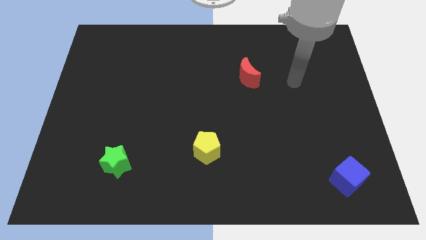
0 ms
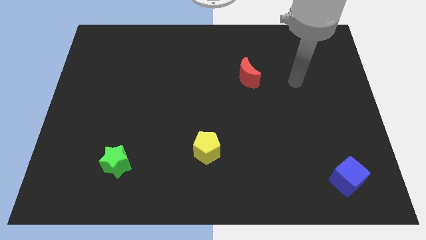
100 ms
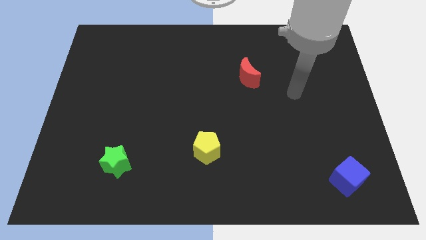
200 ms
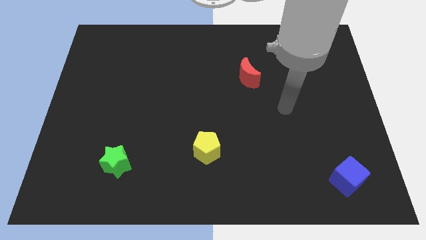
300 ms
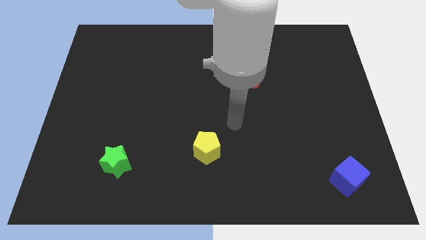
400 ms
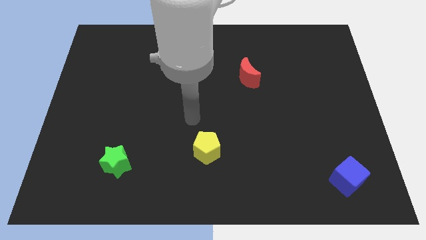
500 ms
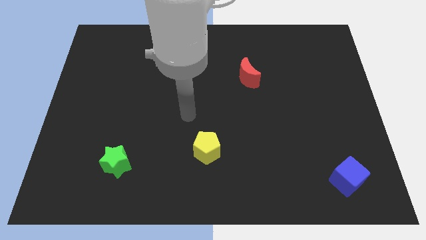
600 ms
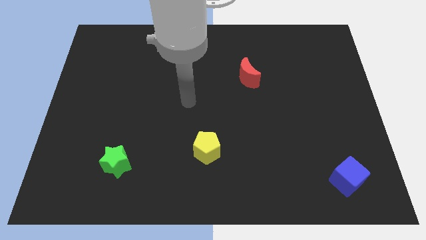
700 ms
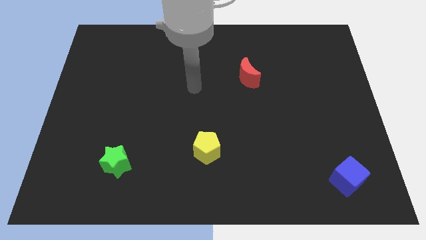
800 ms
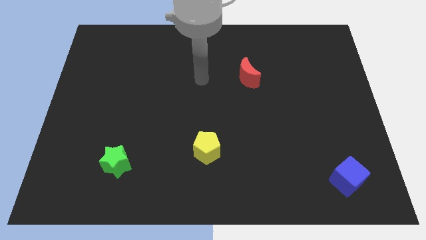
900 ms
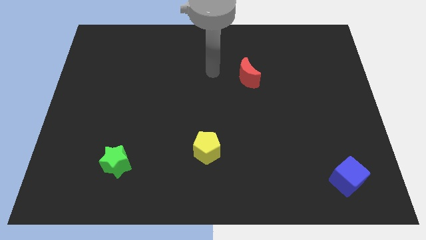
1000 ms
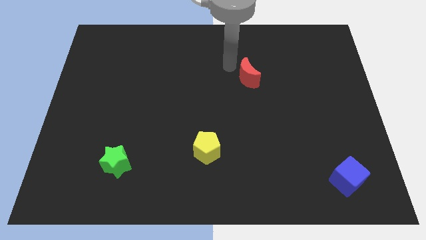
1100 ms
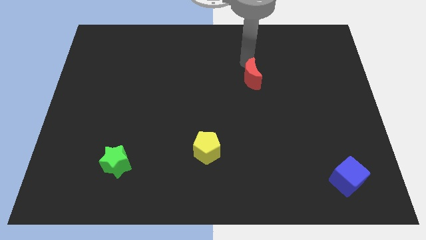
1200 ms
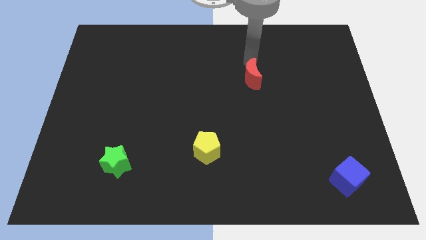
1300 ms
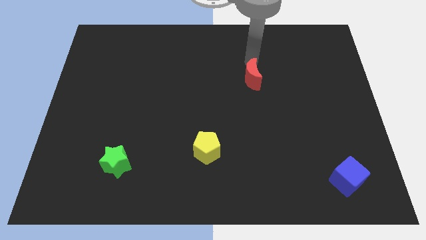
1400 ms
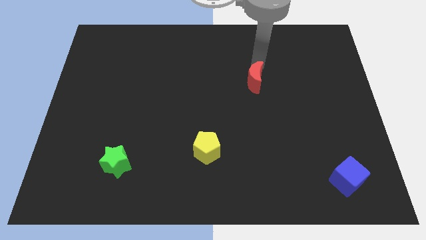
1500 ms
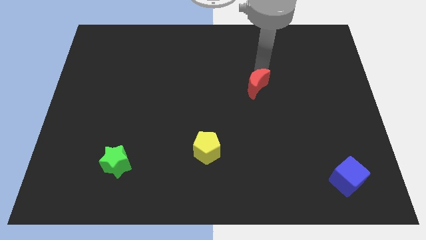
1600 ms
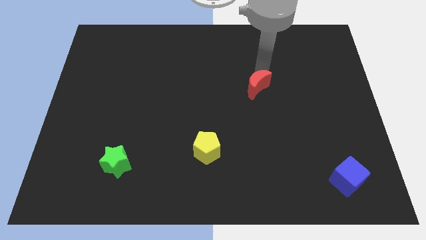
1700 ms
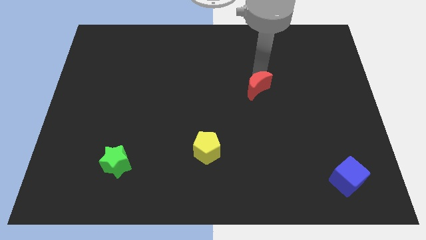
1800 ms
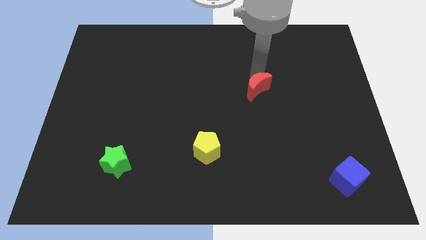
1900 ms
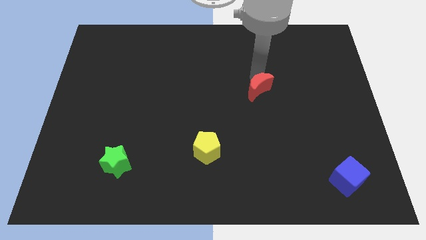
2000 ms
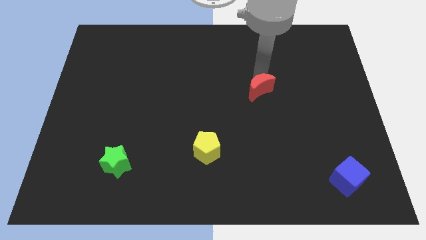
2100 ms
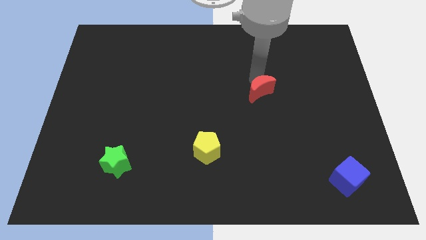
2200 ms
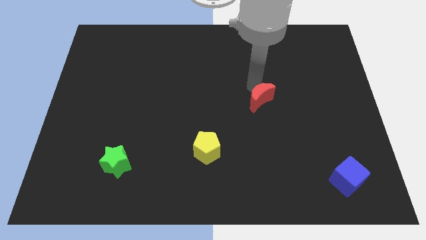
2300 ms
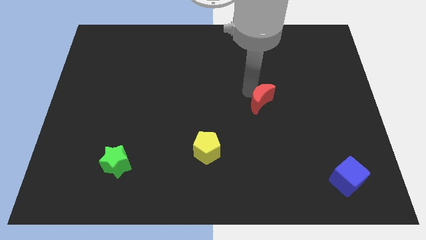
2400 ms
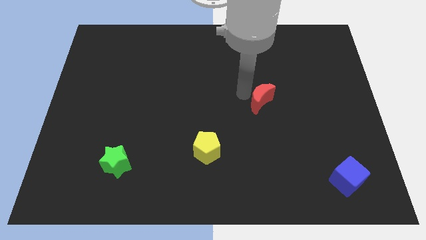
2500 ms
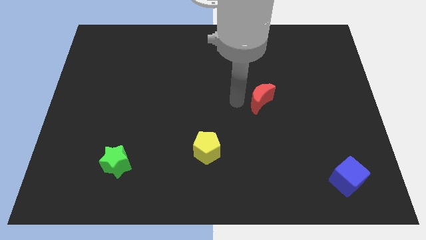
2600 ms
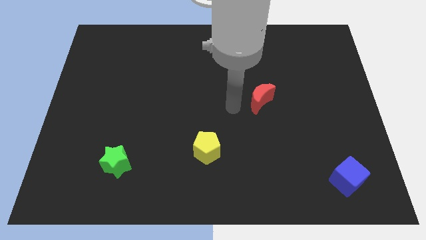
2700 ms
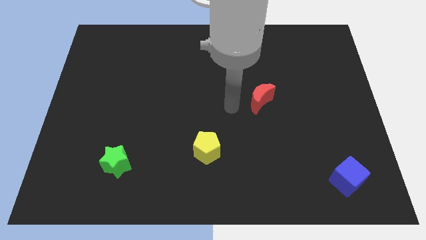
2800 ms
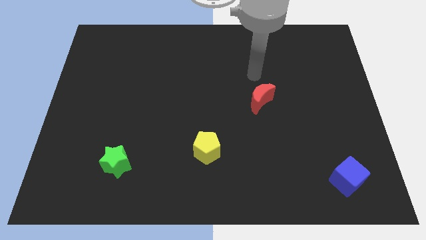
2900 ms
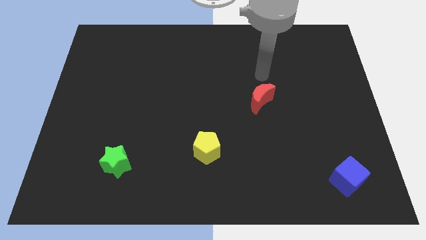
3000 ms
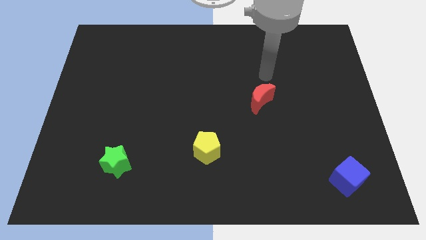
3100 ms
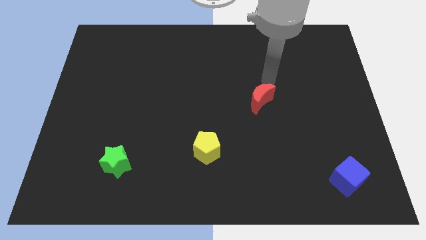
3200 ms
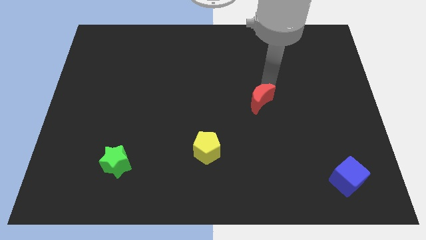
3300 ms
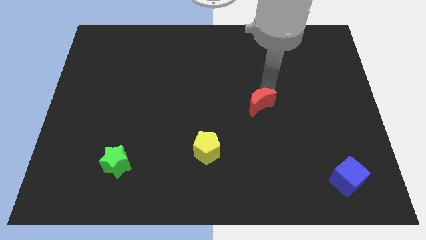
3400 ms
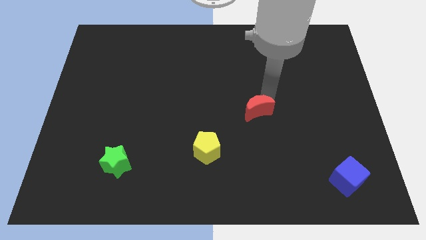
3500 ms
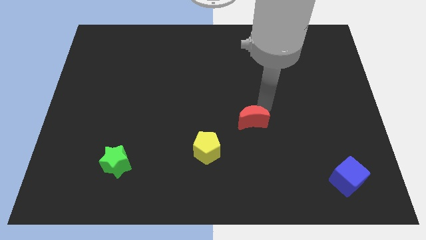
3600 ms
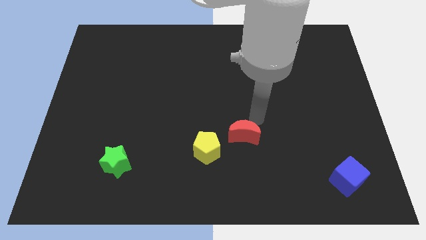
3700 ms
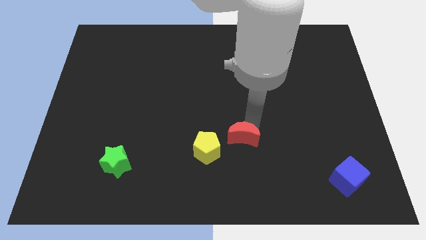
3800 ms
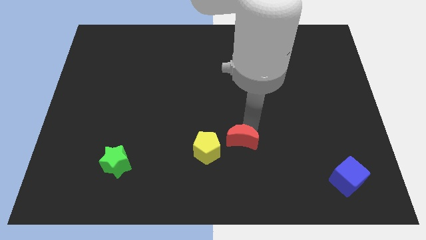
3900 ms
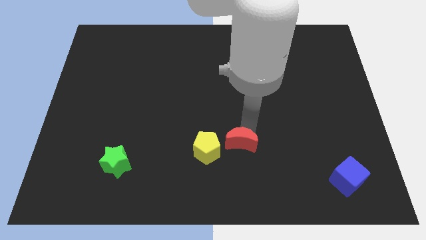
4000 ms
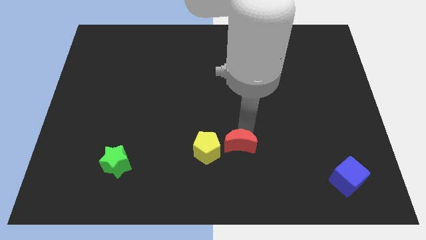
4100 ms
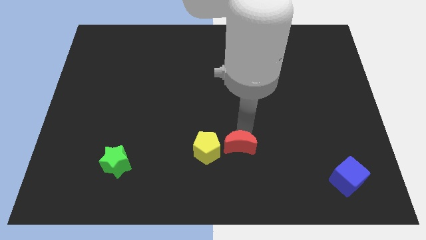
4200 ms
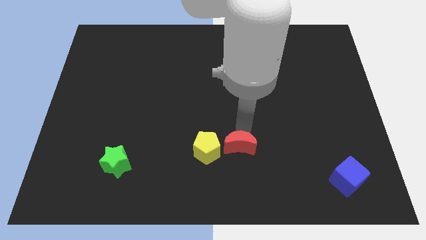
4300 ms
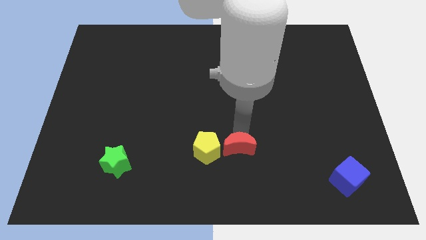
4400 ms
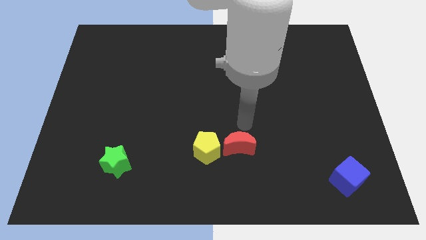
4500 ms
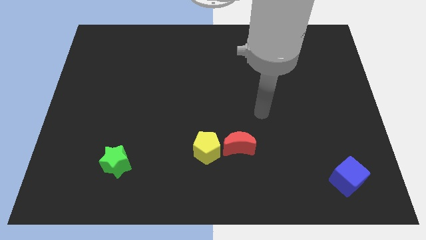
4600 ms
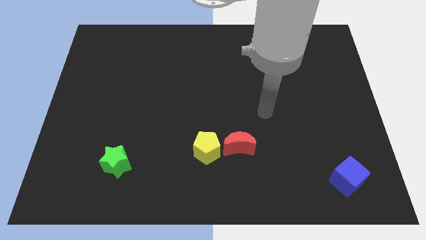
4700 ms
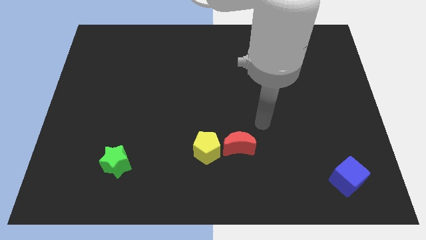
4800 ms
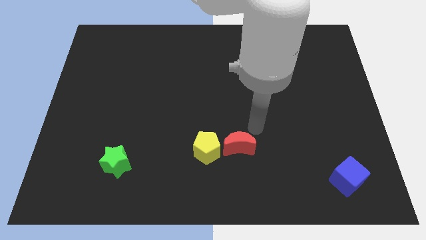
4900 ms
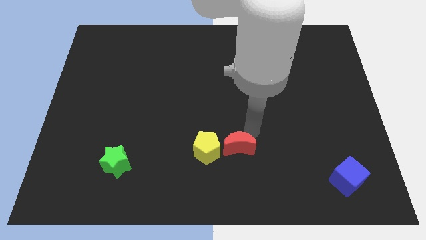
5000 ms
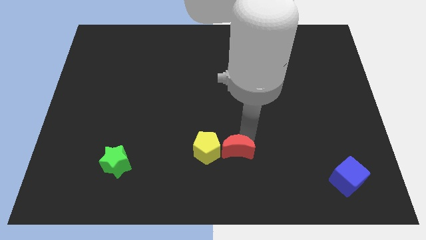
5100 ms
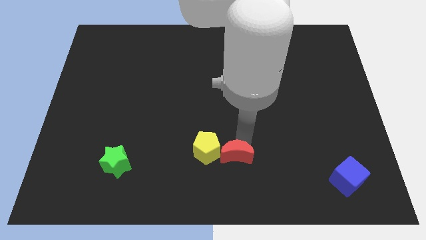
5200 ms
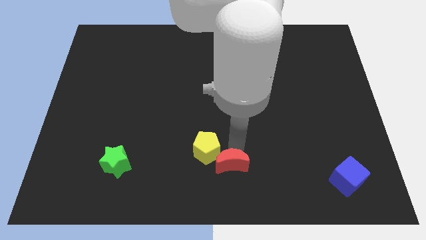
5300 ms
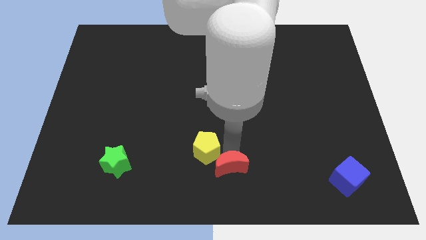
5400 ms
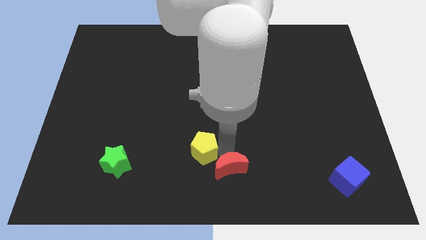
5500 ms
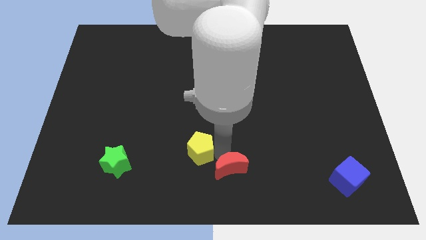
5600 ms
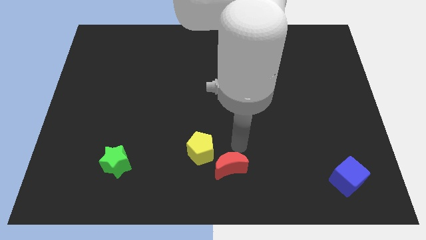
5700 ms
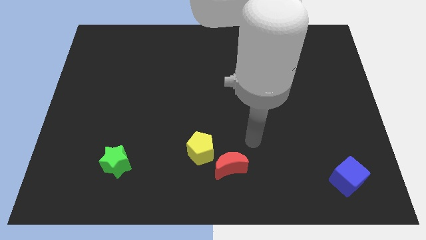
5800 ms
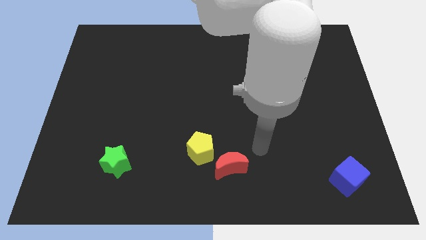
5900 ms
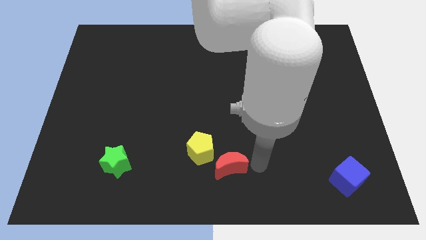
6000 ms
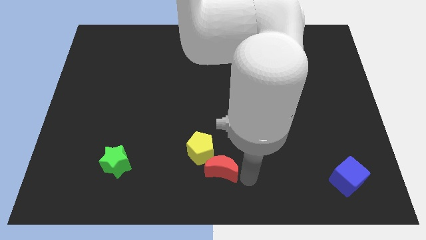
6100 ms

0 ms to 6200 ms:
push the red moon towards the pentagon

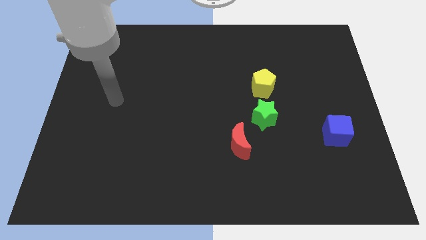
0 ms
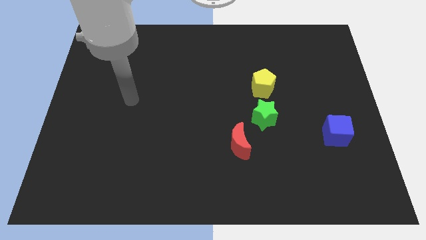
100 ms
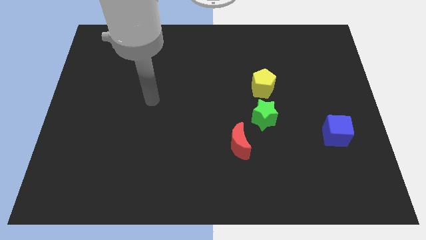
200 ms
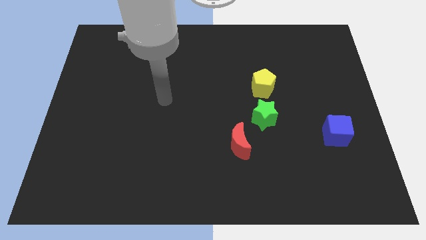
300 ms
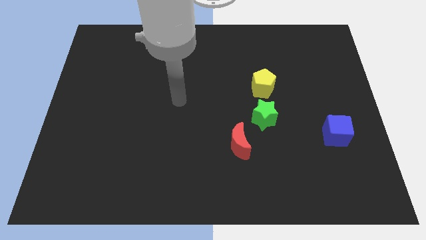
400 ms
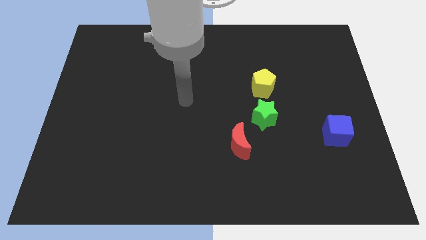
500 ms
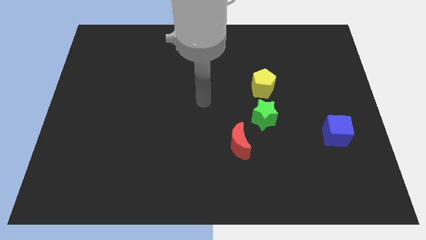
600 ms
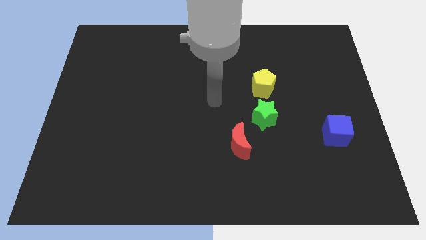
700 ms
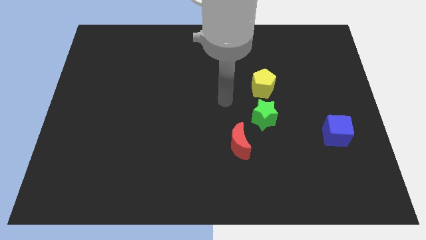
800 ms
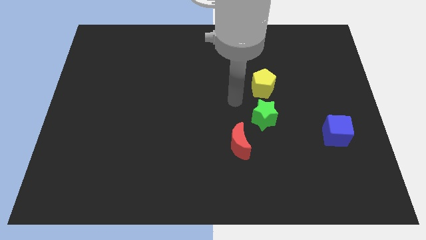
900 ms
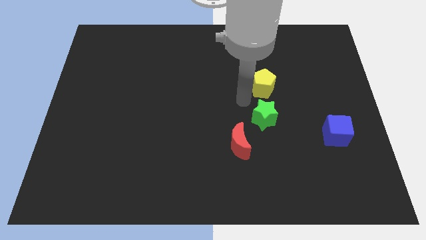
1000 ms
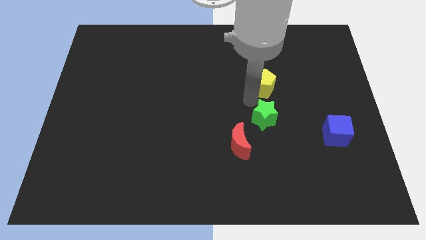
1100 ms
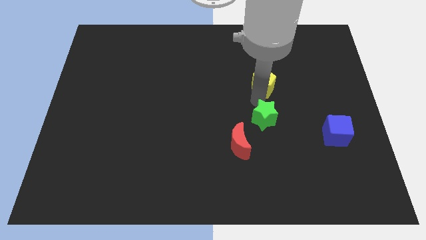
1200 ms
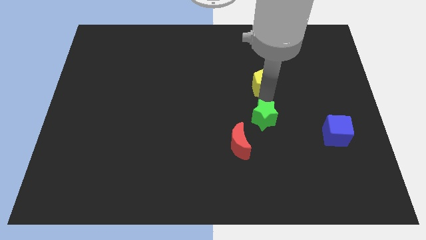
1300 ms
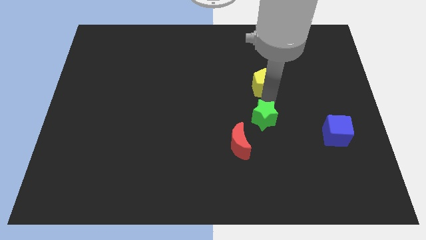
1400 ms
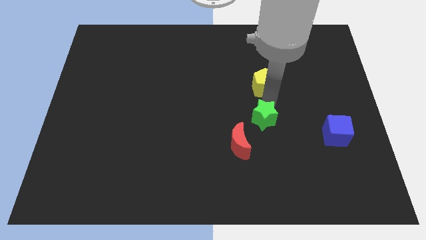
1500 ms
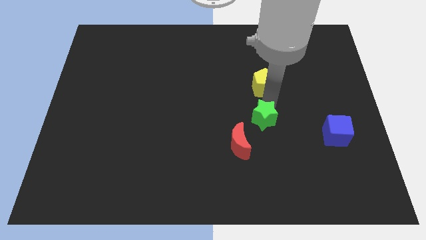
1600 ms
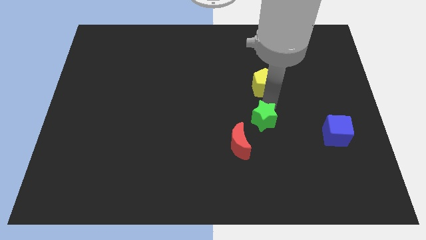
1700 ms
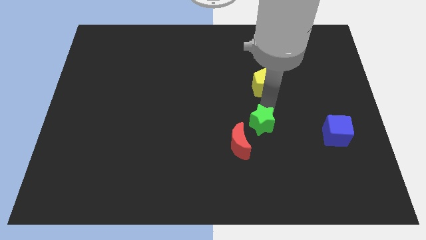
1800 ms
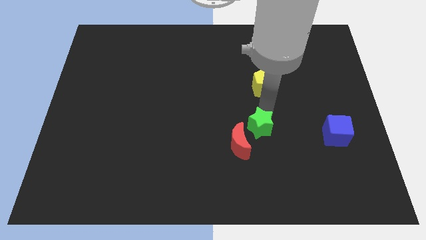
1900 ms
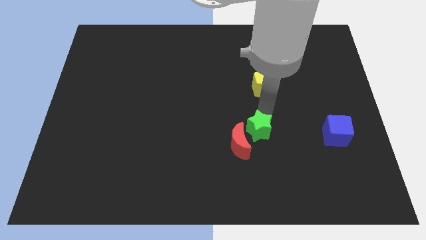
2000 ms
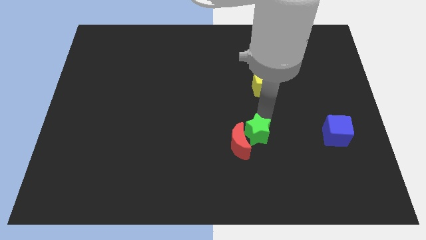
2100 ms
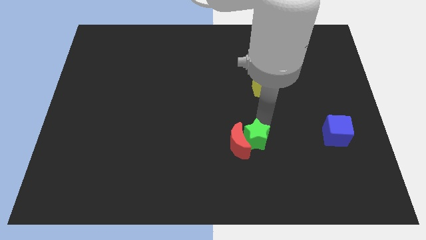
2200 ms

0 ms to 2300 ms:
push the star close to the red moon

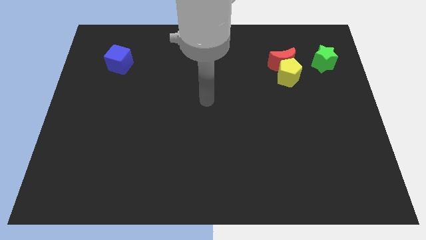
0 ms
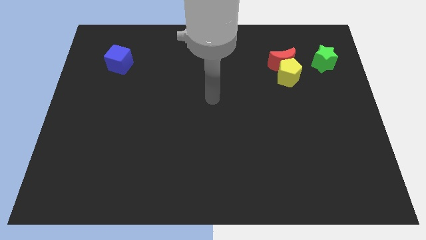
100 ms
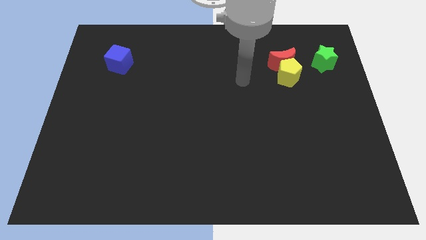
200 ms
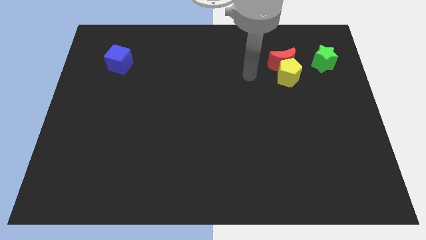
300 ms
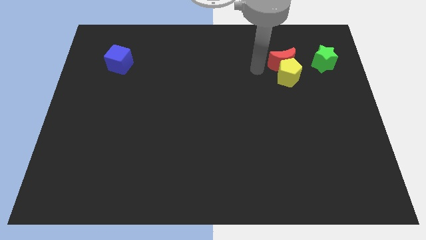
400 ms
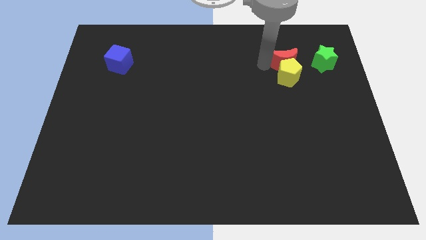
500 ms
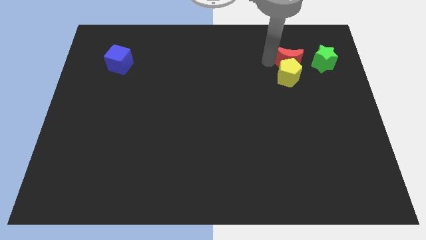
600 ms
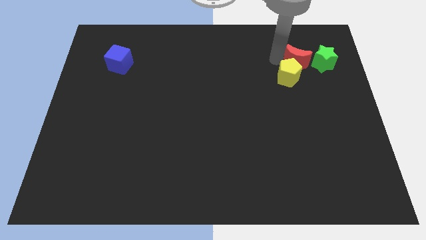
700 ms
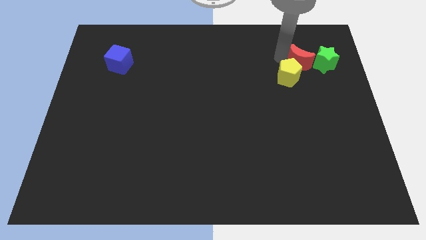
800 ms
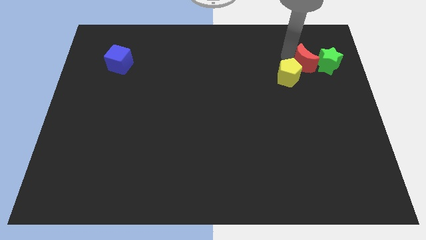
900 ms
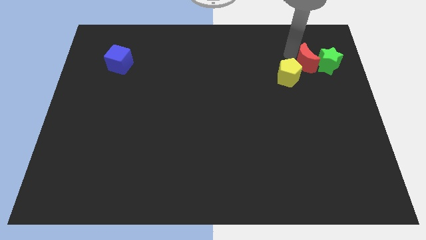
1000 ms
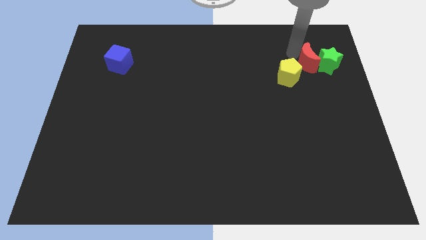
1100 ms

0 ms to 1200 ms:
put the red moon towards the green block
